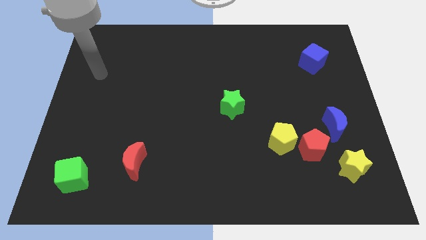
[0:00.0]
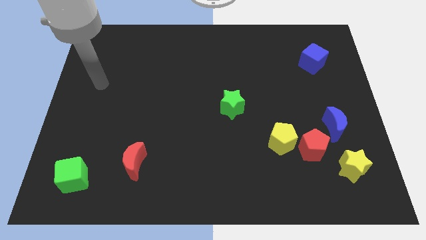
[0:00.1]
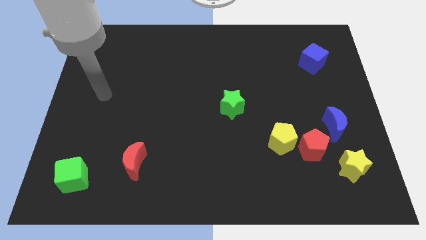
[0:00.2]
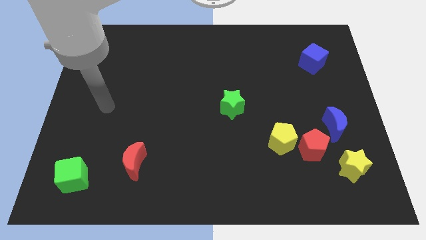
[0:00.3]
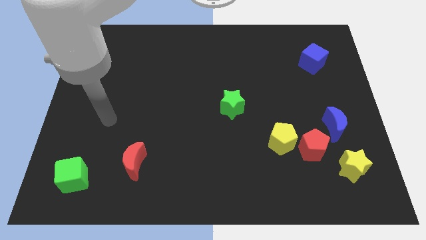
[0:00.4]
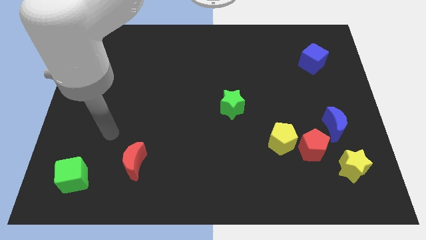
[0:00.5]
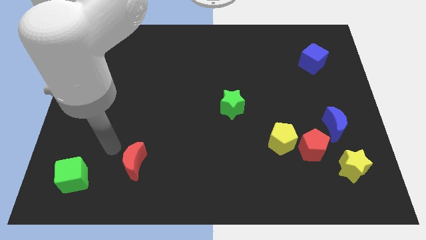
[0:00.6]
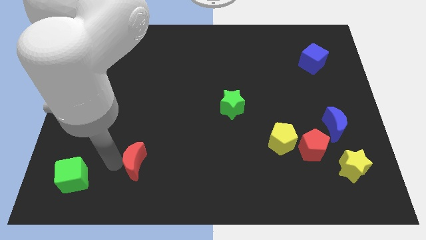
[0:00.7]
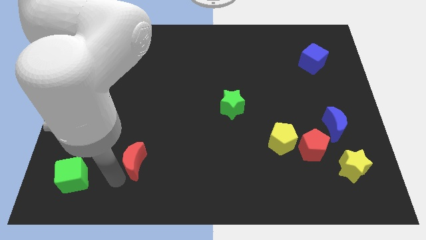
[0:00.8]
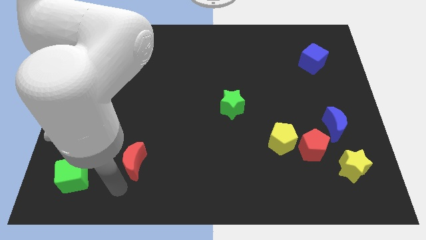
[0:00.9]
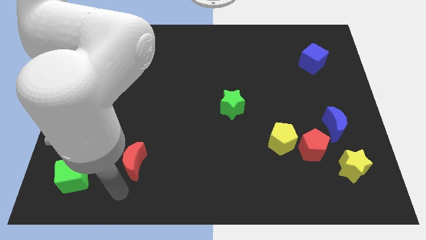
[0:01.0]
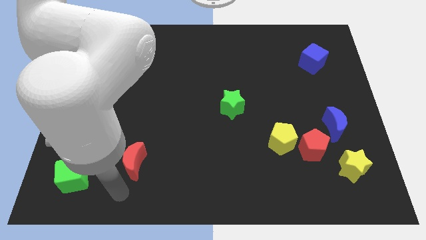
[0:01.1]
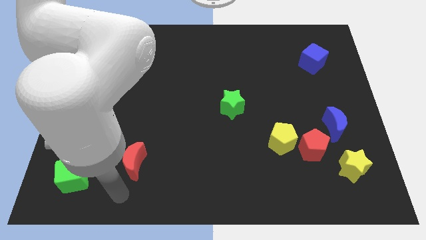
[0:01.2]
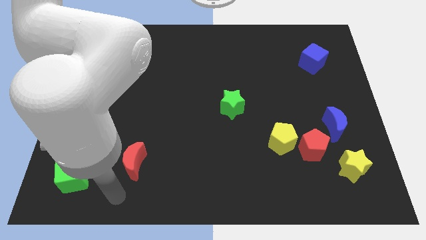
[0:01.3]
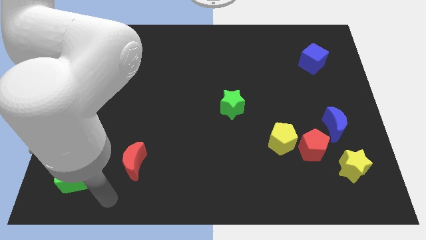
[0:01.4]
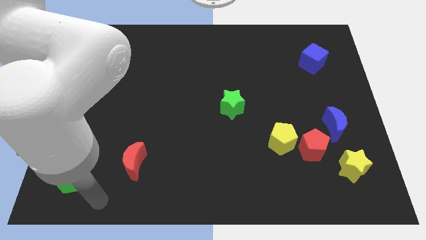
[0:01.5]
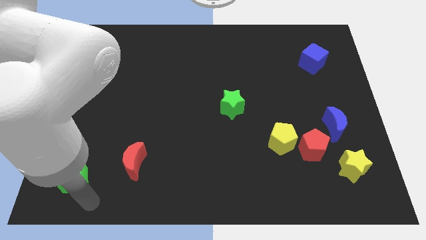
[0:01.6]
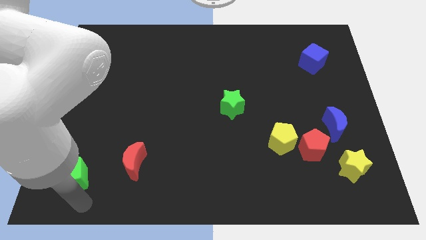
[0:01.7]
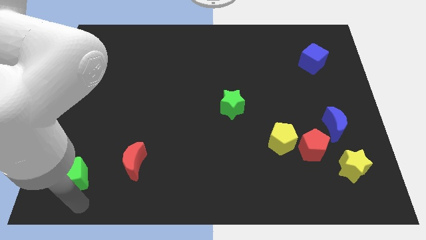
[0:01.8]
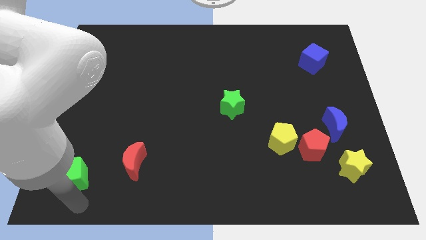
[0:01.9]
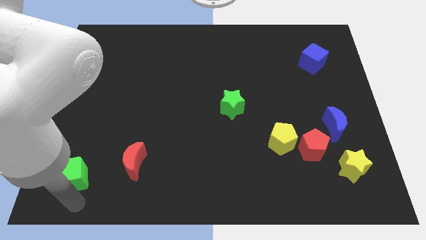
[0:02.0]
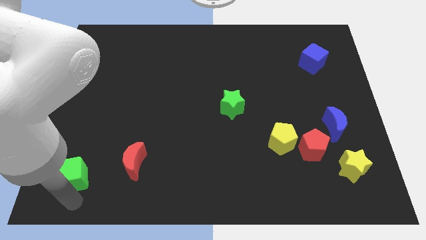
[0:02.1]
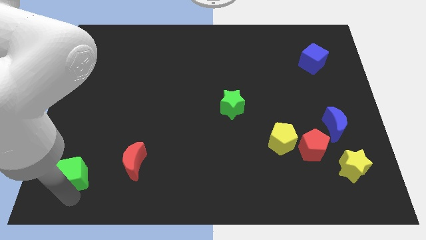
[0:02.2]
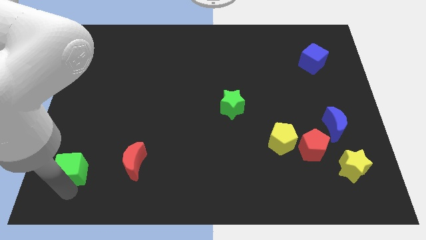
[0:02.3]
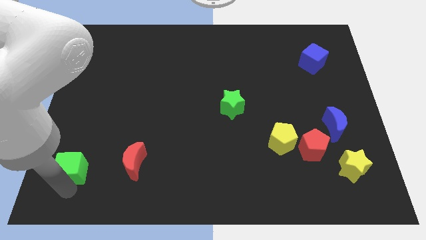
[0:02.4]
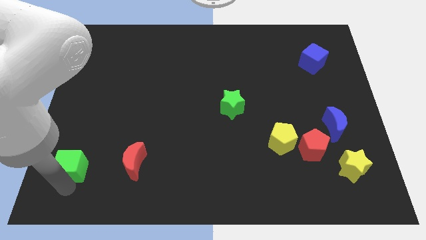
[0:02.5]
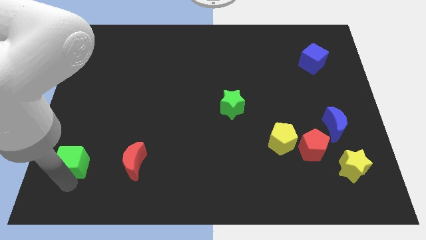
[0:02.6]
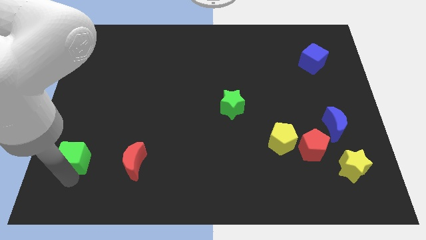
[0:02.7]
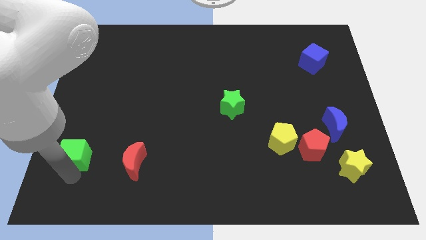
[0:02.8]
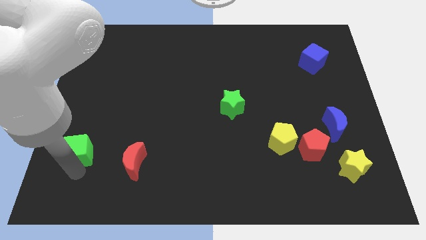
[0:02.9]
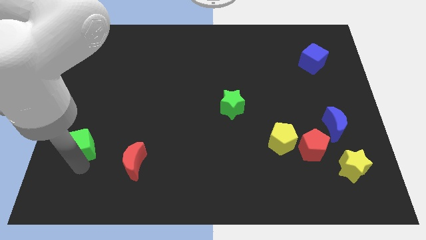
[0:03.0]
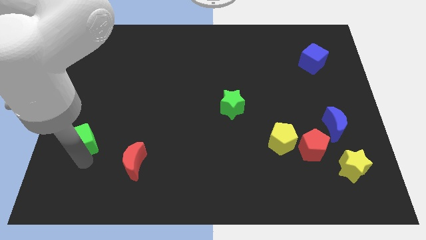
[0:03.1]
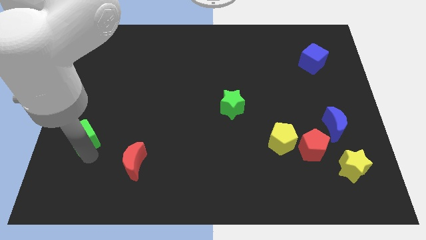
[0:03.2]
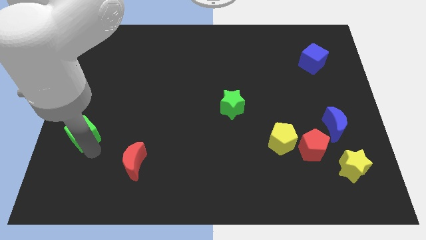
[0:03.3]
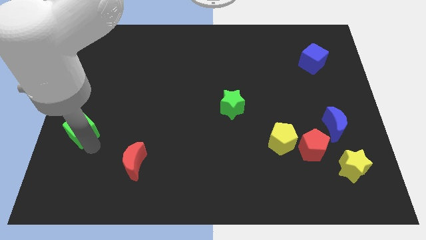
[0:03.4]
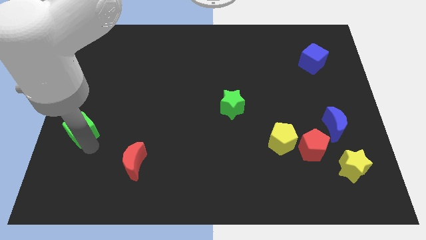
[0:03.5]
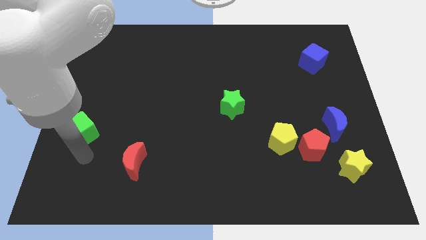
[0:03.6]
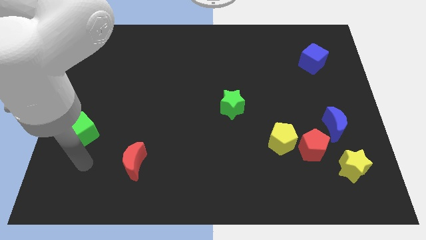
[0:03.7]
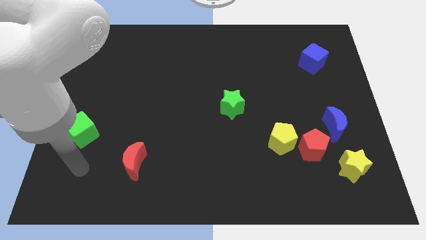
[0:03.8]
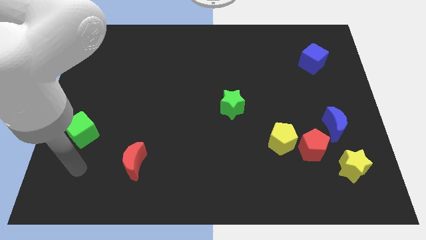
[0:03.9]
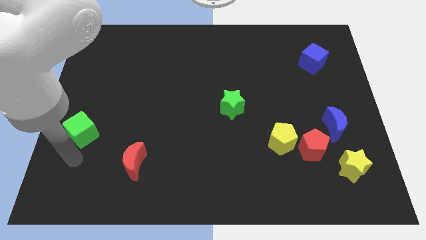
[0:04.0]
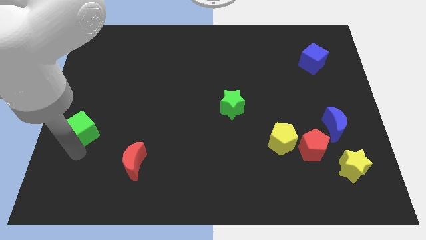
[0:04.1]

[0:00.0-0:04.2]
place the green cube diagonally to the left of the red moon

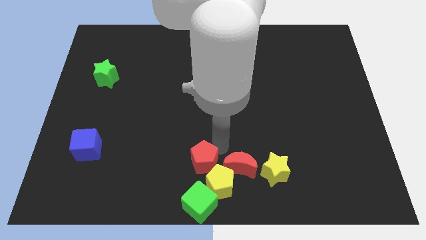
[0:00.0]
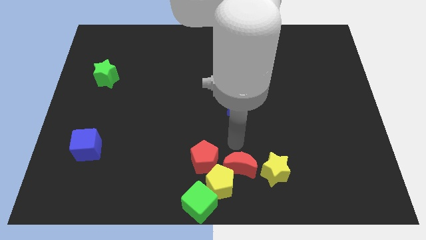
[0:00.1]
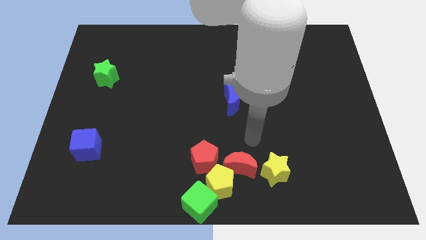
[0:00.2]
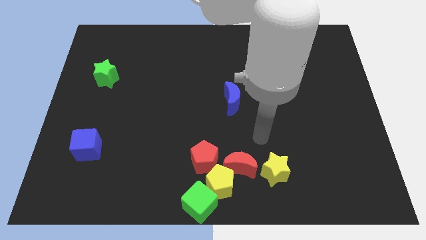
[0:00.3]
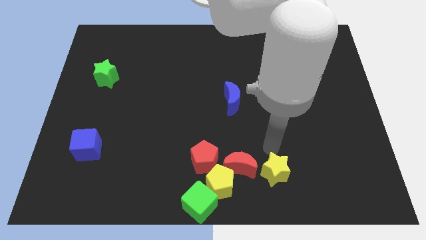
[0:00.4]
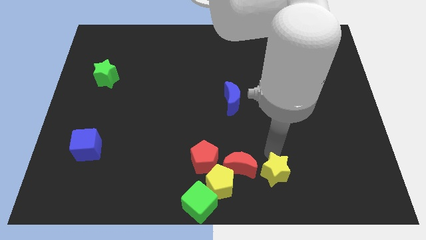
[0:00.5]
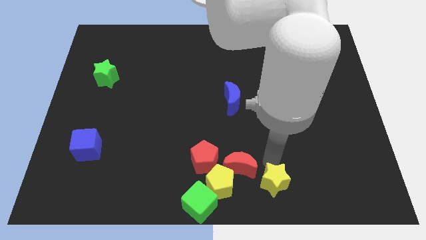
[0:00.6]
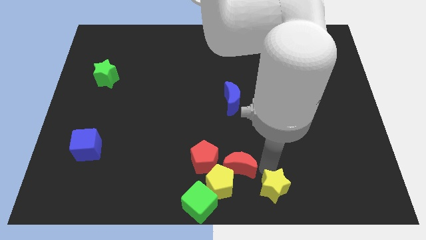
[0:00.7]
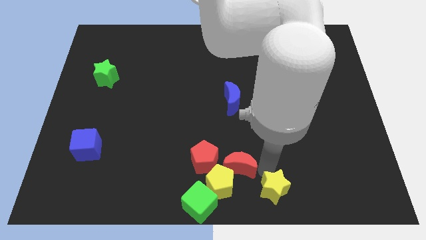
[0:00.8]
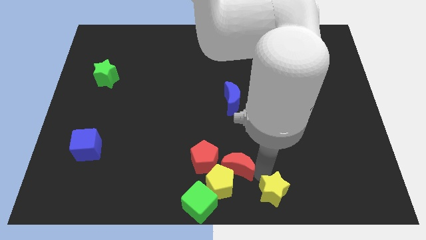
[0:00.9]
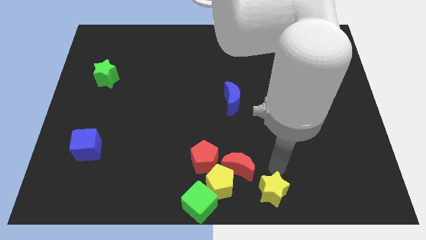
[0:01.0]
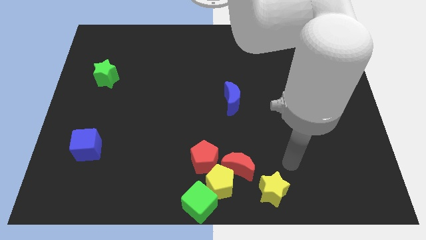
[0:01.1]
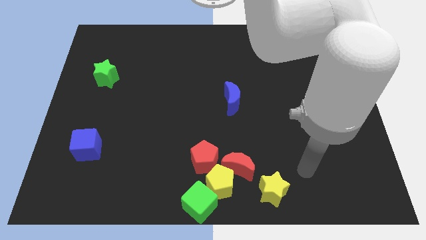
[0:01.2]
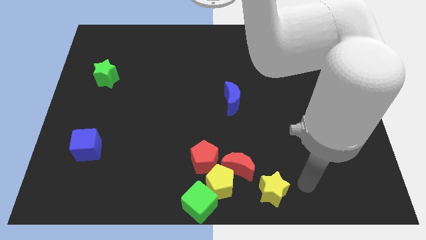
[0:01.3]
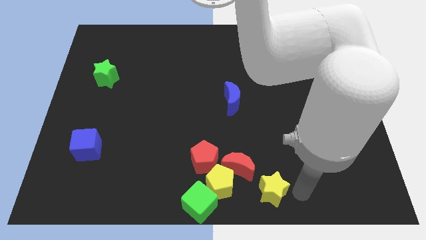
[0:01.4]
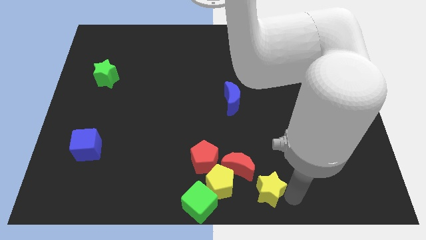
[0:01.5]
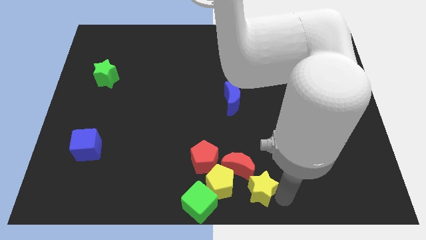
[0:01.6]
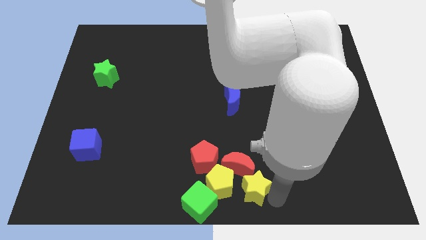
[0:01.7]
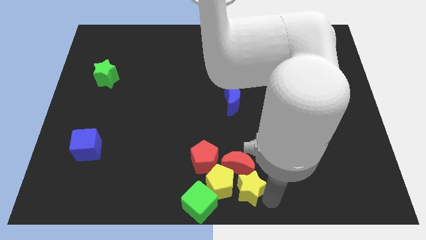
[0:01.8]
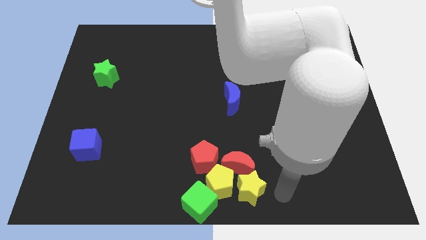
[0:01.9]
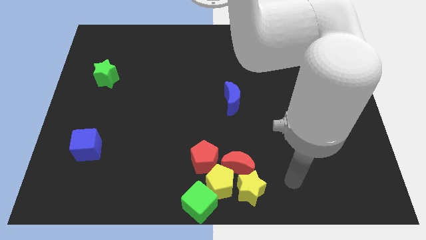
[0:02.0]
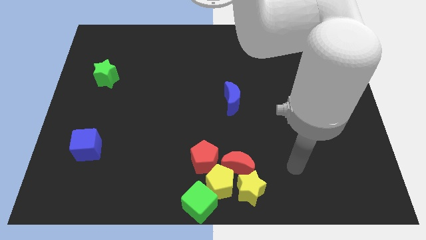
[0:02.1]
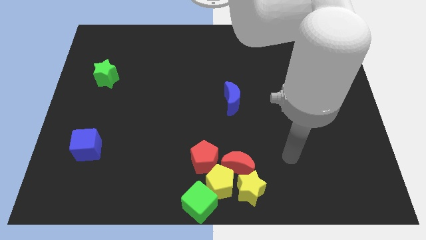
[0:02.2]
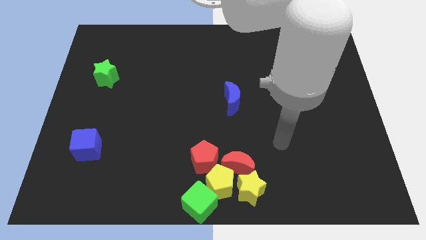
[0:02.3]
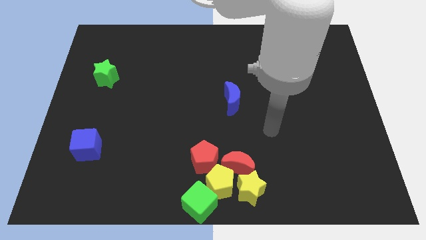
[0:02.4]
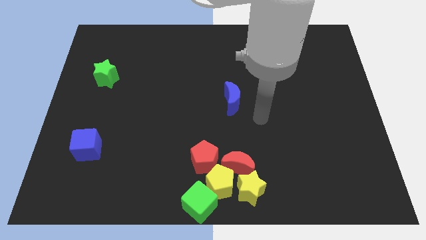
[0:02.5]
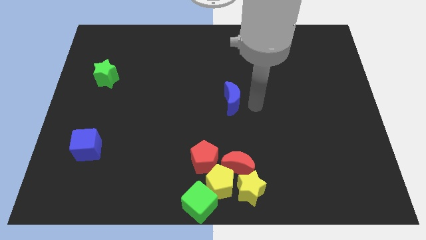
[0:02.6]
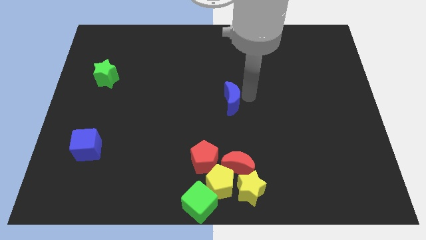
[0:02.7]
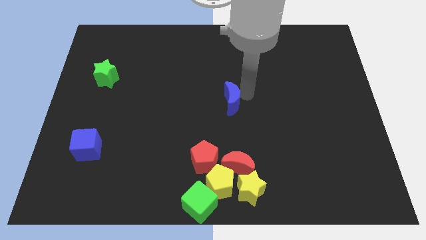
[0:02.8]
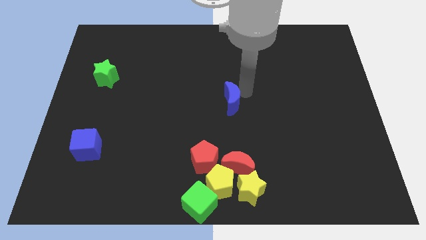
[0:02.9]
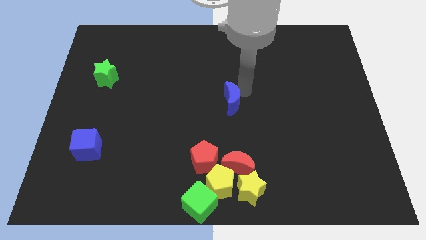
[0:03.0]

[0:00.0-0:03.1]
slide the yellow star towards the yellow pentagon

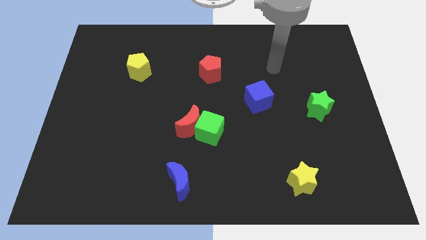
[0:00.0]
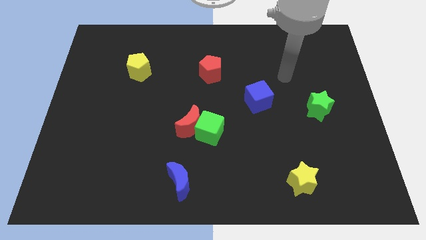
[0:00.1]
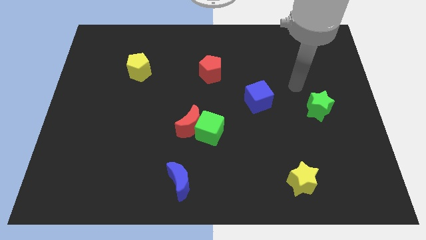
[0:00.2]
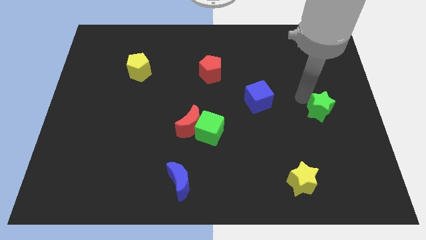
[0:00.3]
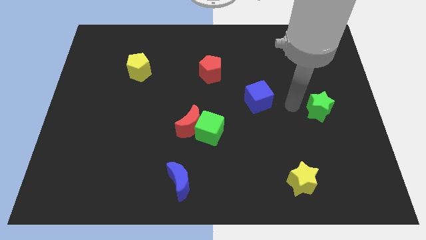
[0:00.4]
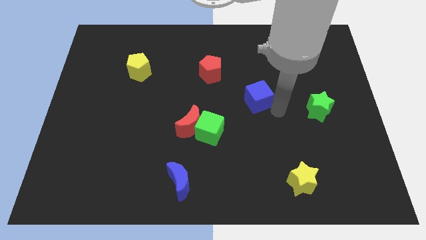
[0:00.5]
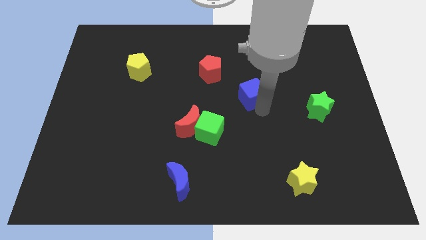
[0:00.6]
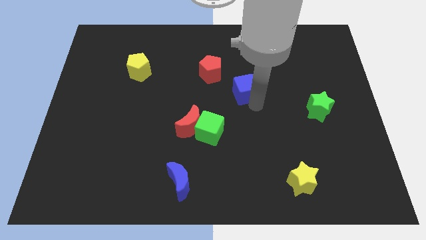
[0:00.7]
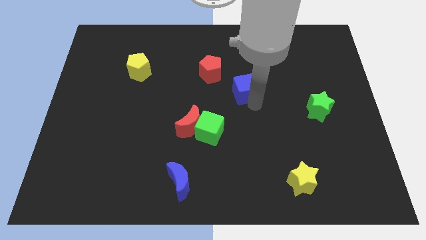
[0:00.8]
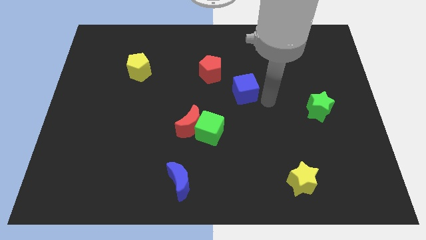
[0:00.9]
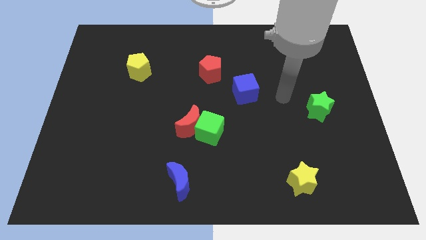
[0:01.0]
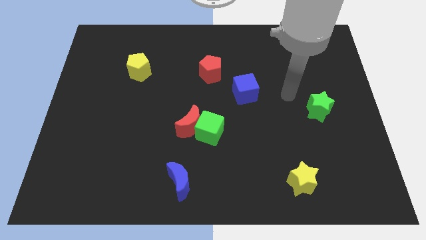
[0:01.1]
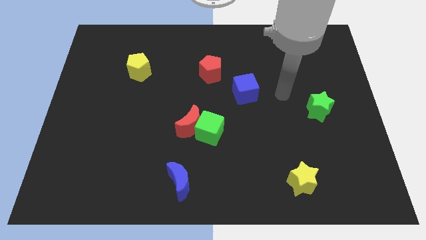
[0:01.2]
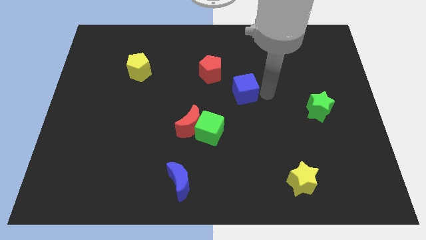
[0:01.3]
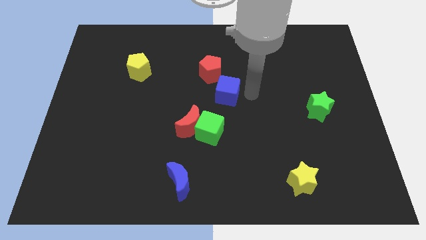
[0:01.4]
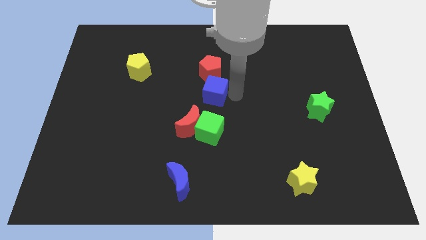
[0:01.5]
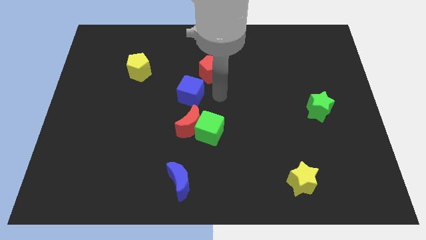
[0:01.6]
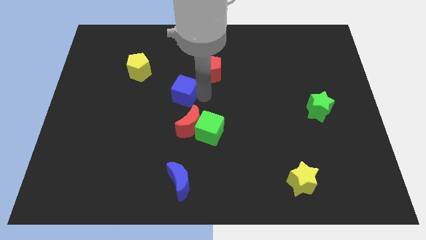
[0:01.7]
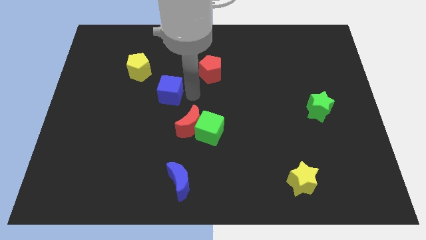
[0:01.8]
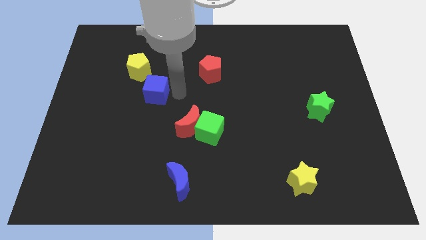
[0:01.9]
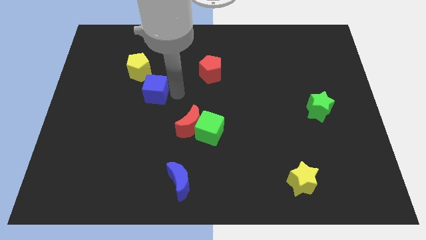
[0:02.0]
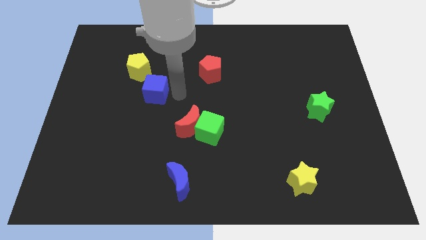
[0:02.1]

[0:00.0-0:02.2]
slide the blue cube behind the yellow pentagon
